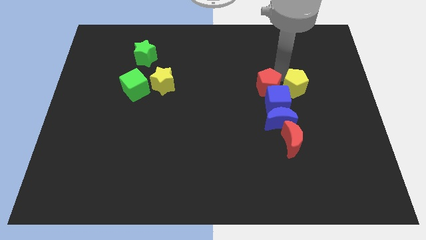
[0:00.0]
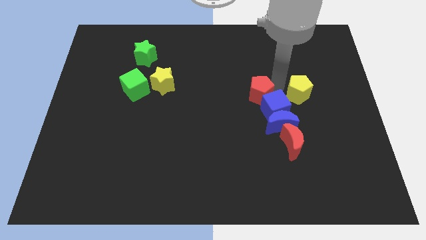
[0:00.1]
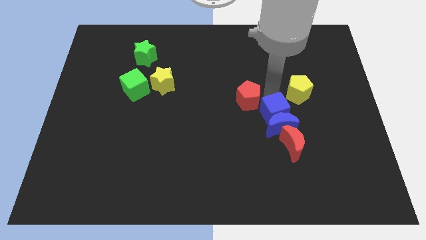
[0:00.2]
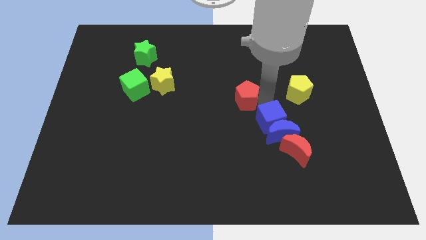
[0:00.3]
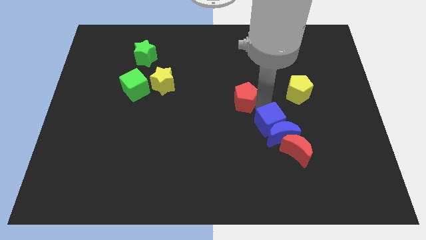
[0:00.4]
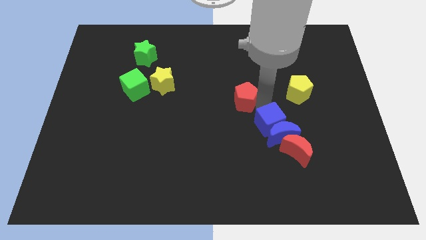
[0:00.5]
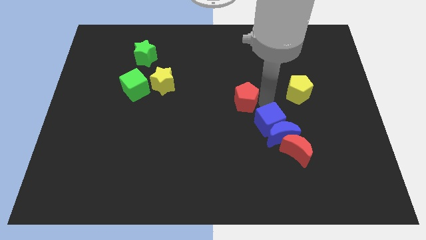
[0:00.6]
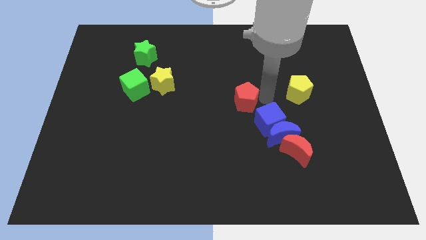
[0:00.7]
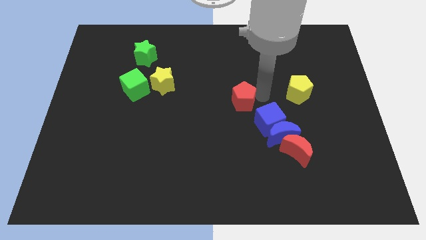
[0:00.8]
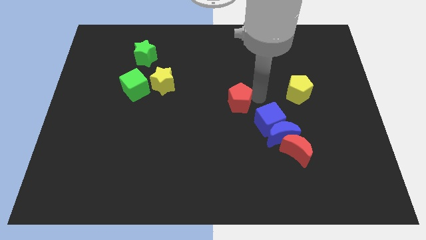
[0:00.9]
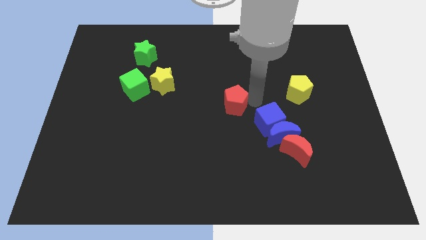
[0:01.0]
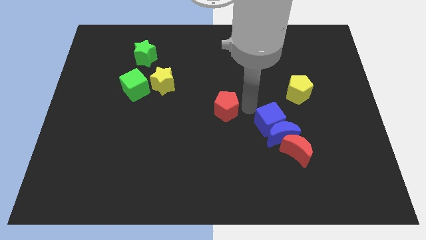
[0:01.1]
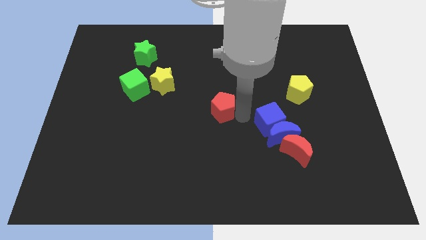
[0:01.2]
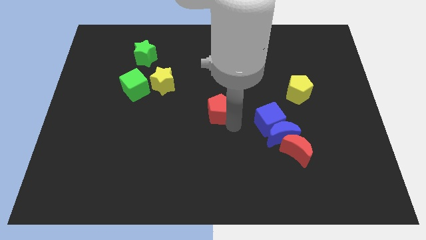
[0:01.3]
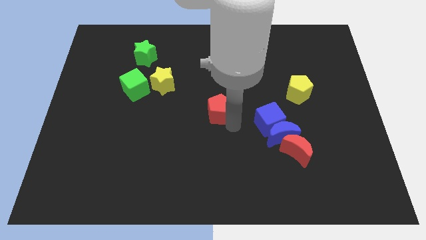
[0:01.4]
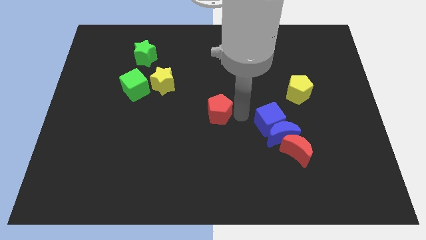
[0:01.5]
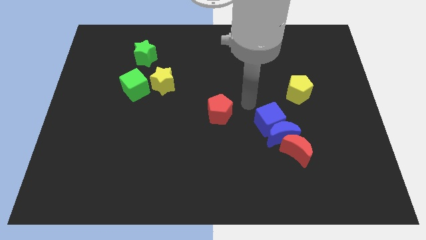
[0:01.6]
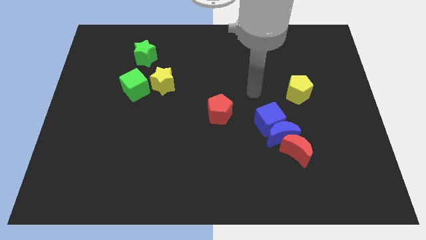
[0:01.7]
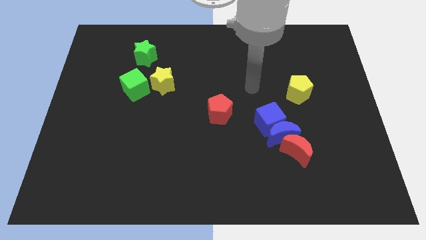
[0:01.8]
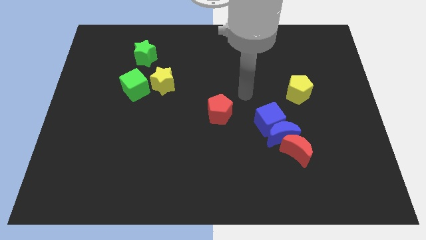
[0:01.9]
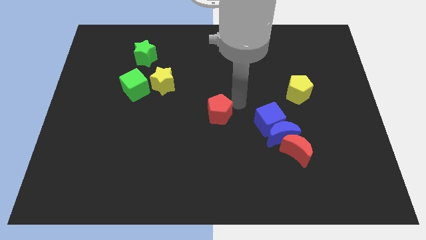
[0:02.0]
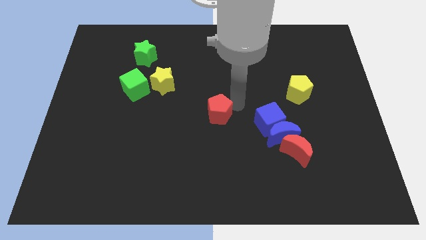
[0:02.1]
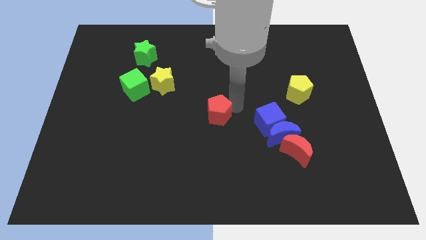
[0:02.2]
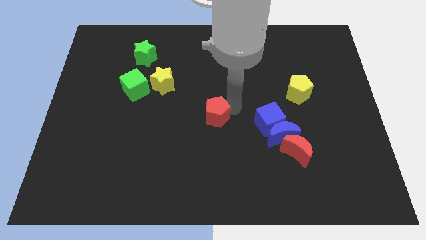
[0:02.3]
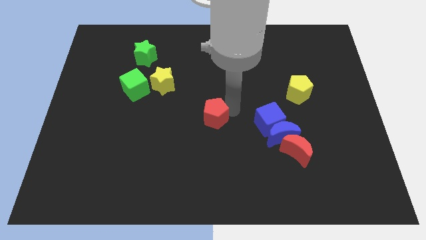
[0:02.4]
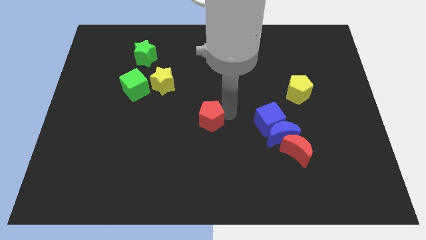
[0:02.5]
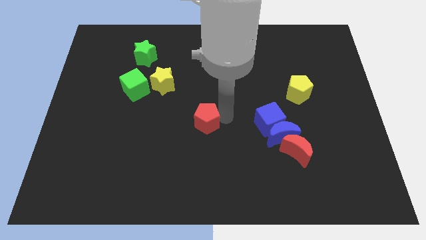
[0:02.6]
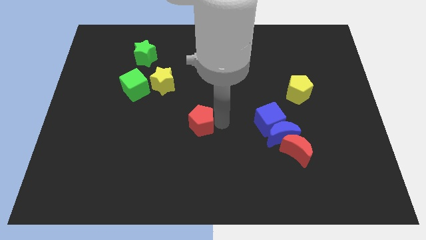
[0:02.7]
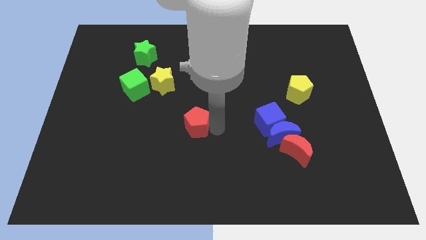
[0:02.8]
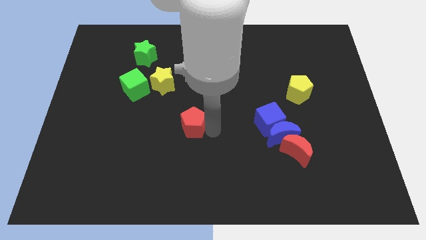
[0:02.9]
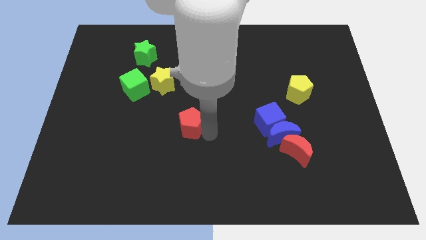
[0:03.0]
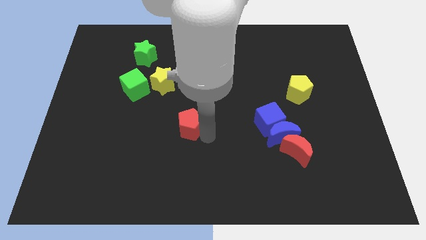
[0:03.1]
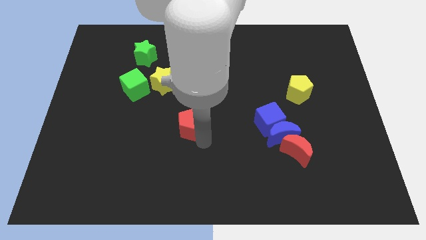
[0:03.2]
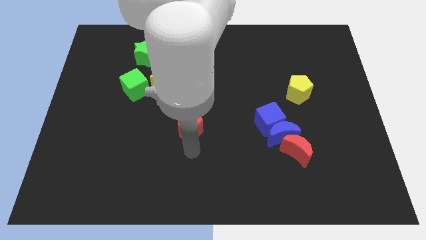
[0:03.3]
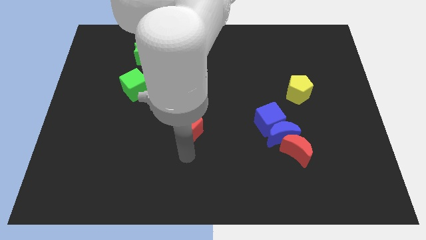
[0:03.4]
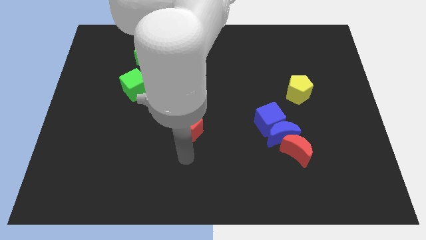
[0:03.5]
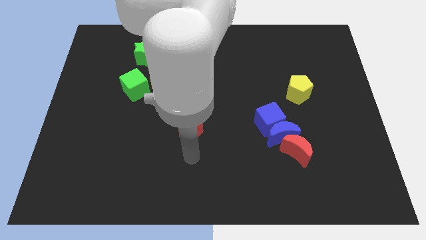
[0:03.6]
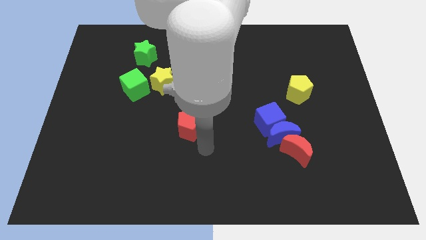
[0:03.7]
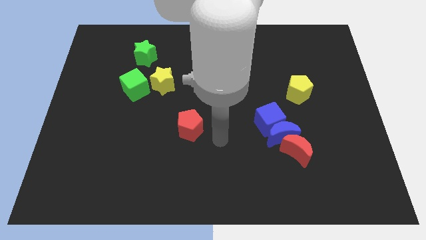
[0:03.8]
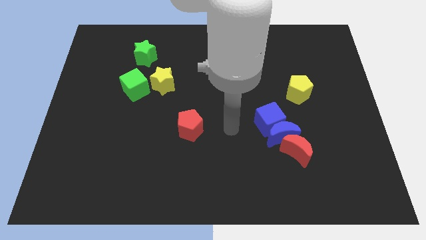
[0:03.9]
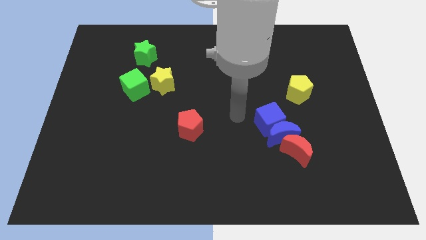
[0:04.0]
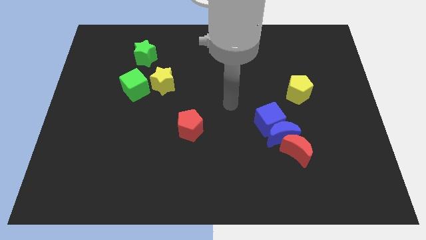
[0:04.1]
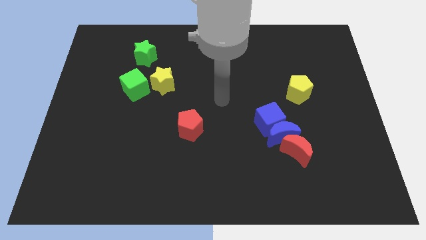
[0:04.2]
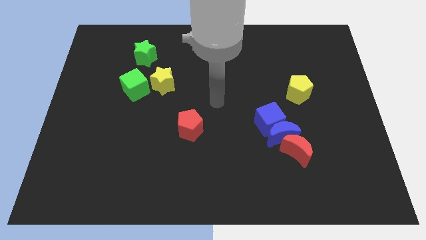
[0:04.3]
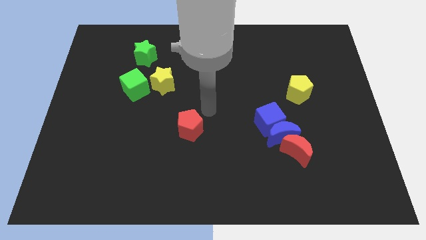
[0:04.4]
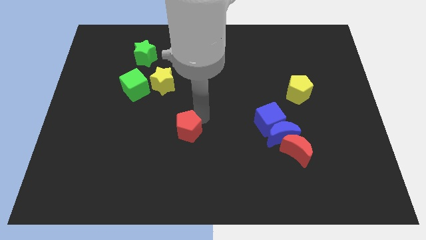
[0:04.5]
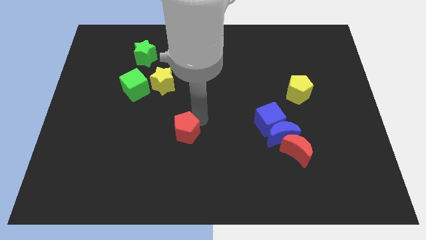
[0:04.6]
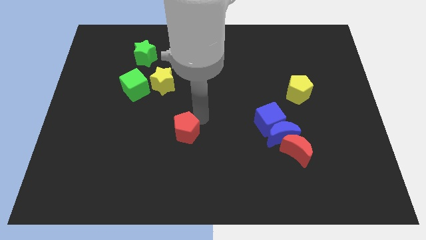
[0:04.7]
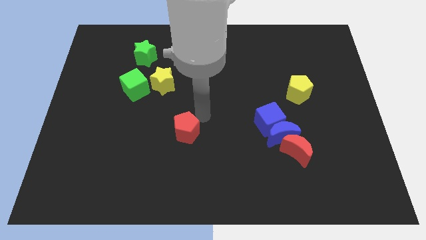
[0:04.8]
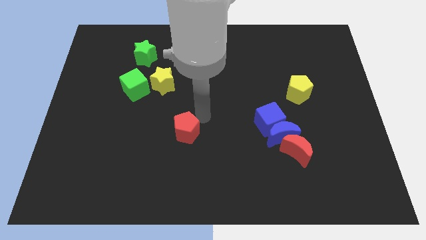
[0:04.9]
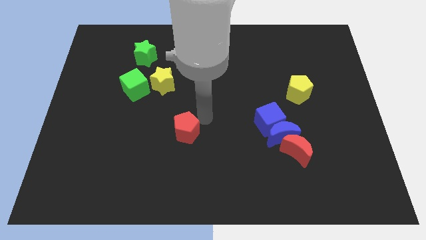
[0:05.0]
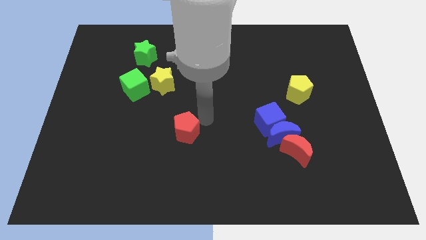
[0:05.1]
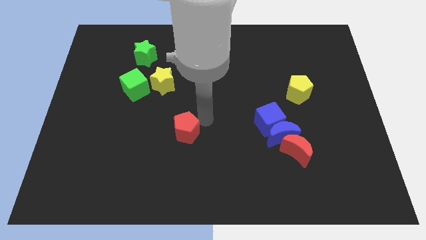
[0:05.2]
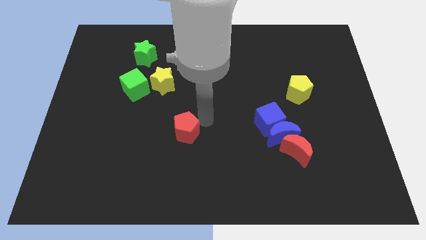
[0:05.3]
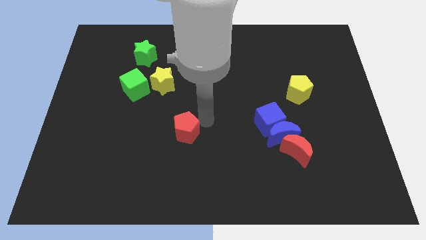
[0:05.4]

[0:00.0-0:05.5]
push red pentagon to center of the board

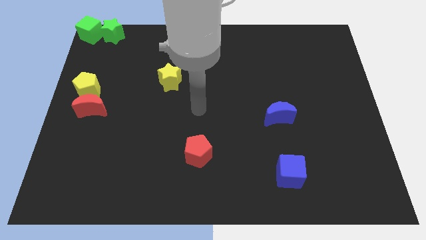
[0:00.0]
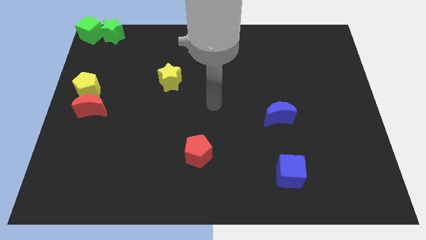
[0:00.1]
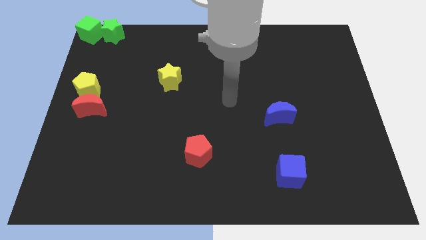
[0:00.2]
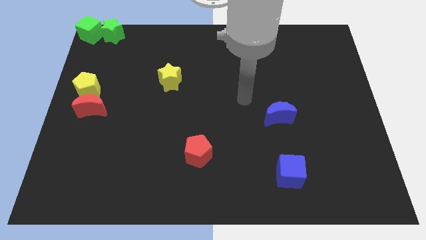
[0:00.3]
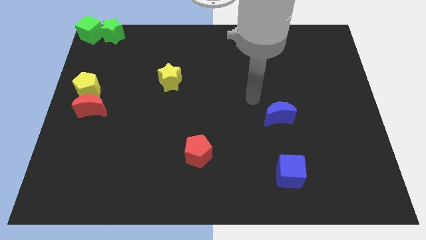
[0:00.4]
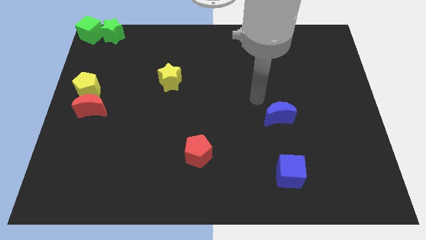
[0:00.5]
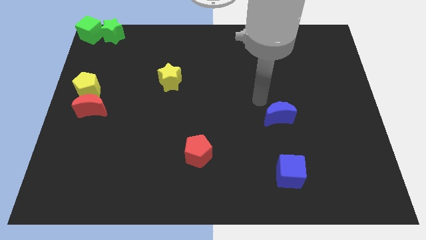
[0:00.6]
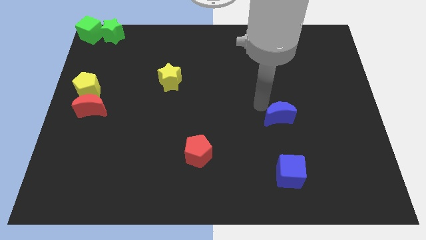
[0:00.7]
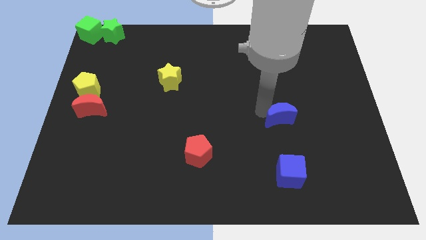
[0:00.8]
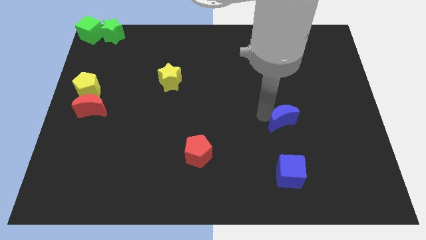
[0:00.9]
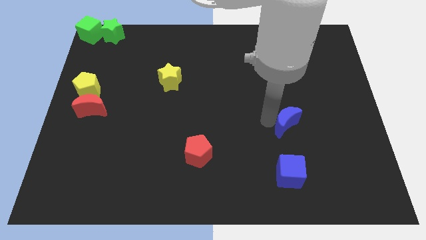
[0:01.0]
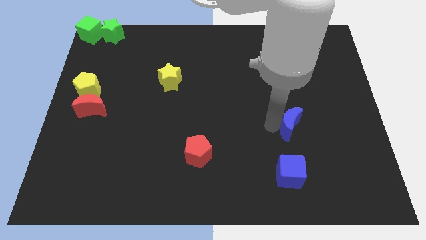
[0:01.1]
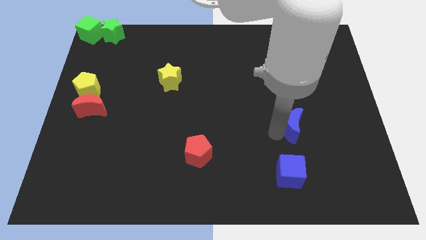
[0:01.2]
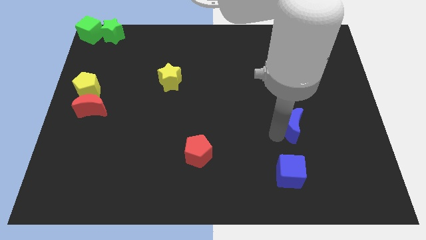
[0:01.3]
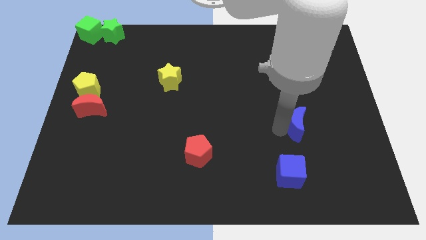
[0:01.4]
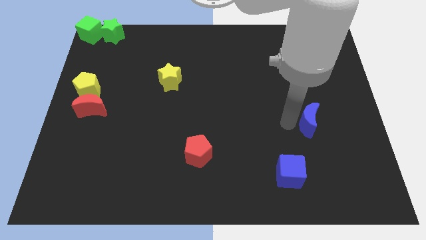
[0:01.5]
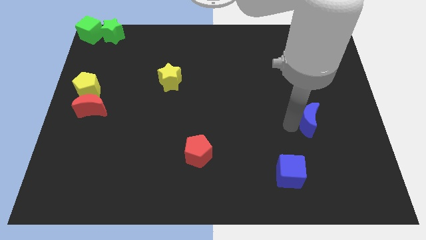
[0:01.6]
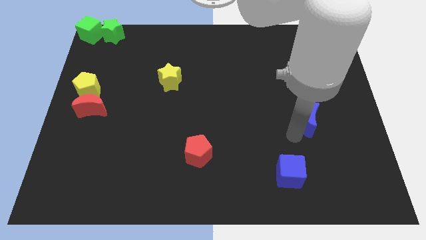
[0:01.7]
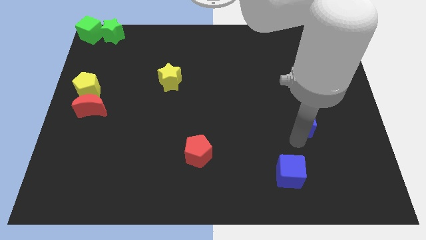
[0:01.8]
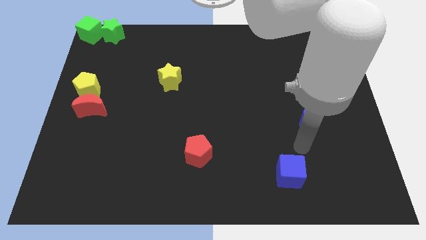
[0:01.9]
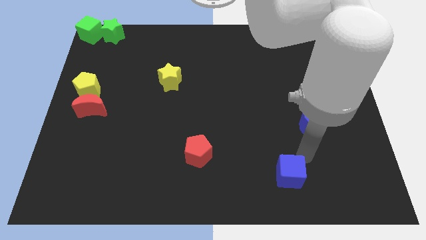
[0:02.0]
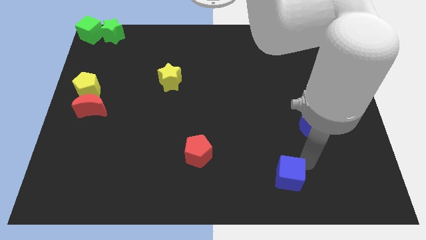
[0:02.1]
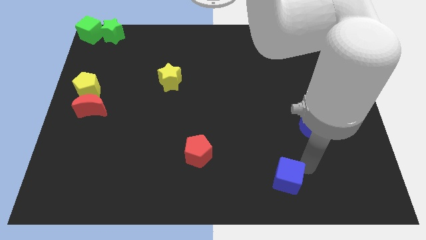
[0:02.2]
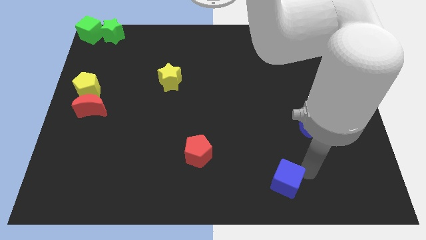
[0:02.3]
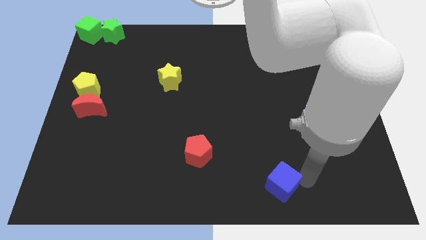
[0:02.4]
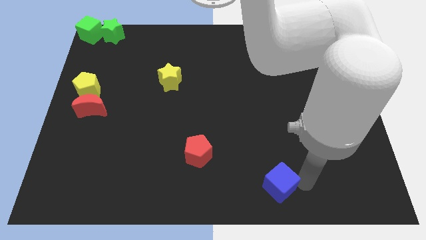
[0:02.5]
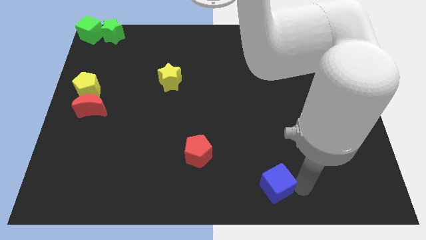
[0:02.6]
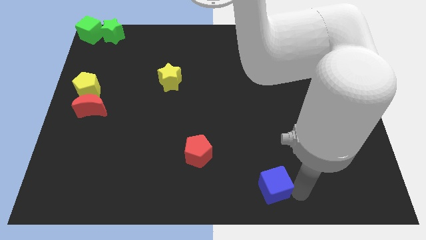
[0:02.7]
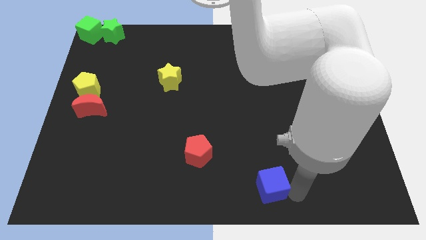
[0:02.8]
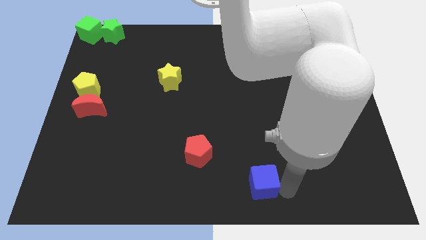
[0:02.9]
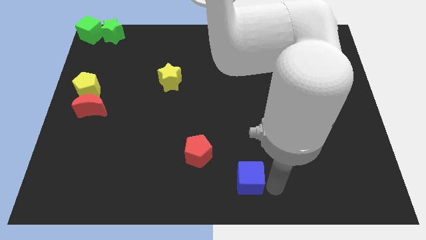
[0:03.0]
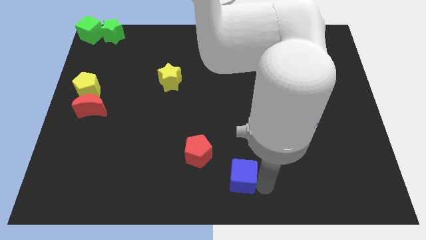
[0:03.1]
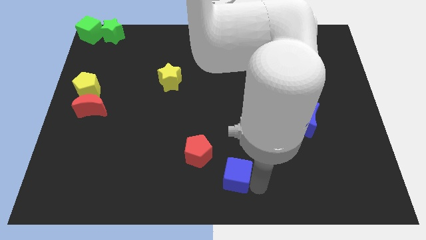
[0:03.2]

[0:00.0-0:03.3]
separate blue cubes from vertical line
